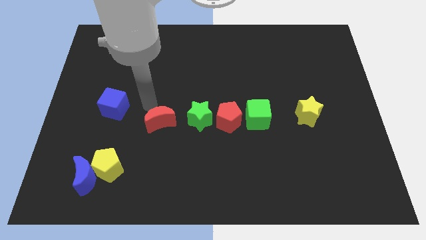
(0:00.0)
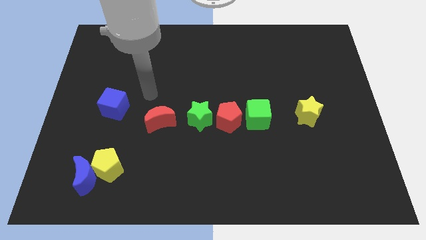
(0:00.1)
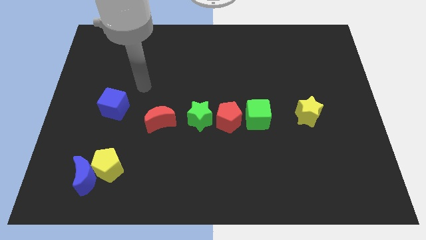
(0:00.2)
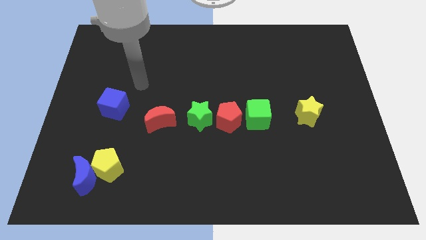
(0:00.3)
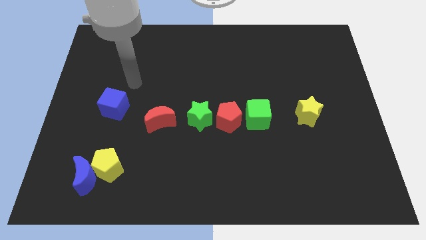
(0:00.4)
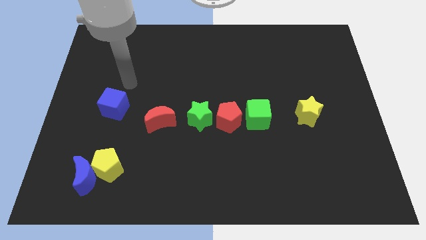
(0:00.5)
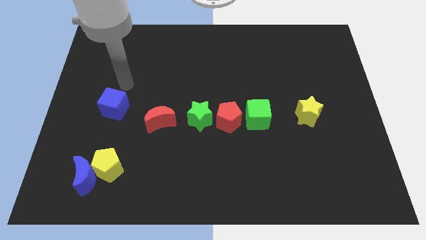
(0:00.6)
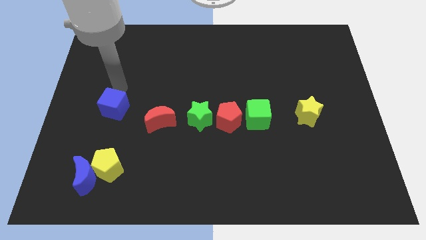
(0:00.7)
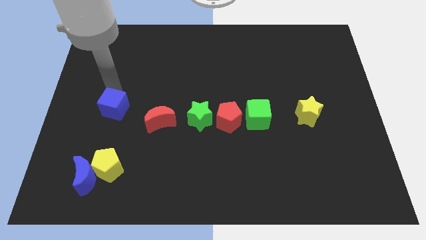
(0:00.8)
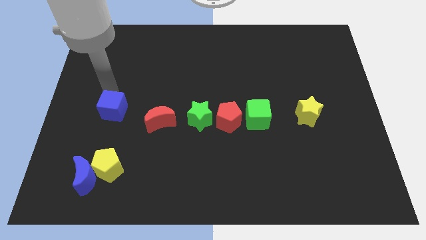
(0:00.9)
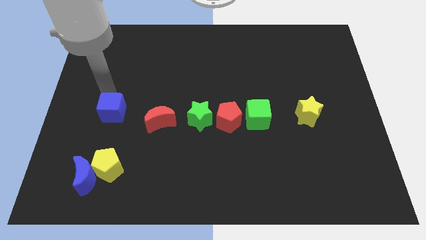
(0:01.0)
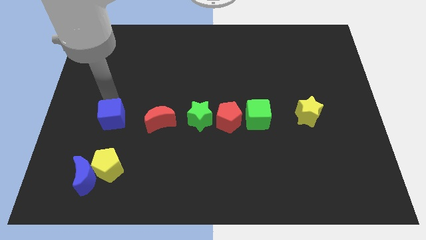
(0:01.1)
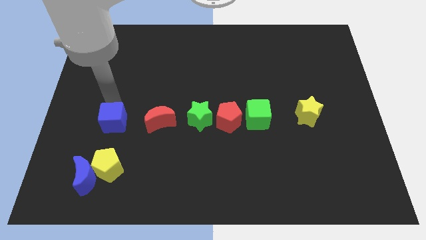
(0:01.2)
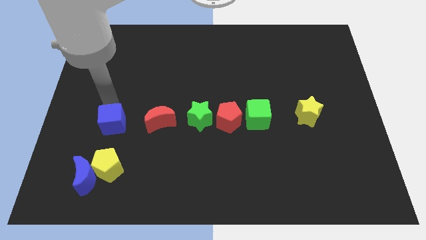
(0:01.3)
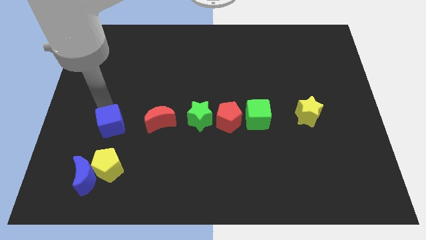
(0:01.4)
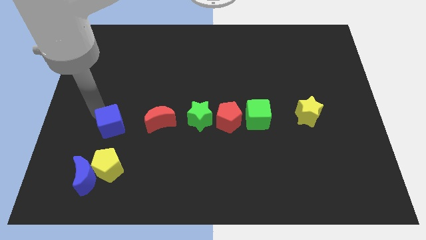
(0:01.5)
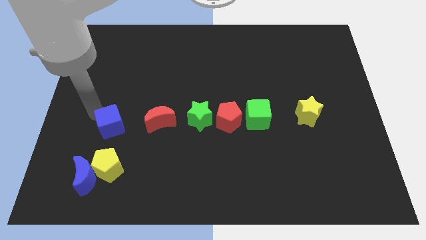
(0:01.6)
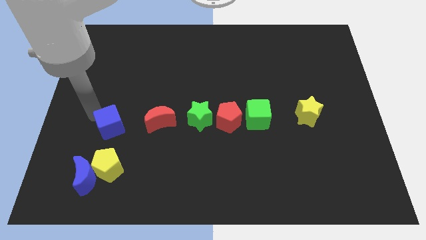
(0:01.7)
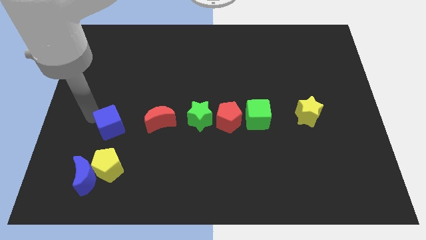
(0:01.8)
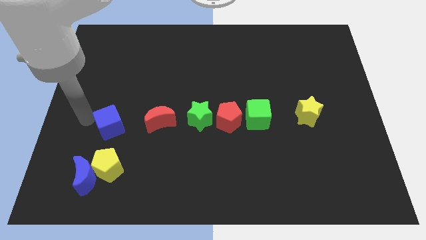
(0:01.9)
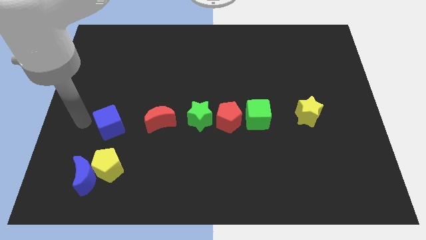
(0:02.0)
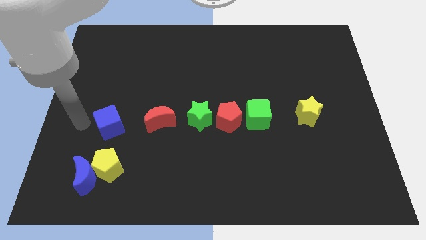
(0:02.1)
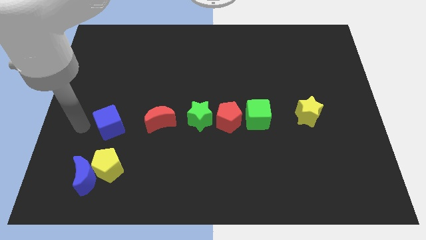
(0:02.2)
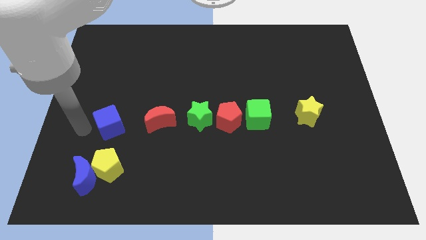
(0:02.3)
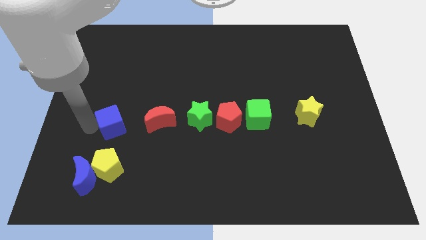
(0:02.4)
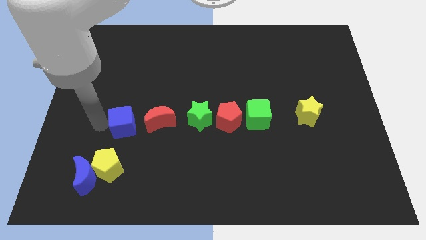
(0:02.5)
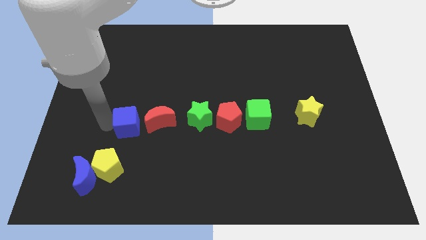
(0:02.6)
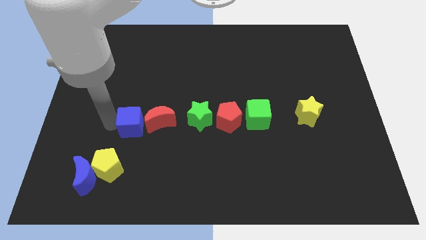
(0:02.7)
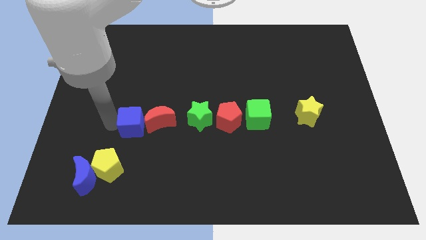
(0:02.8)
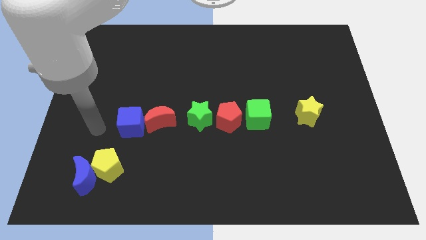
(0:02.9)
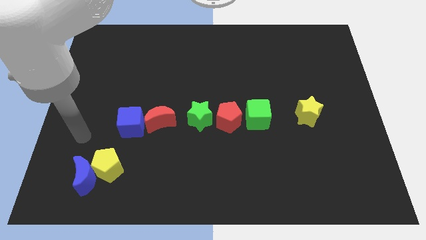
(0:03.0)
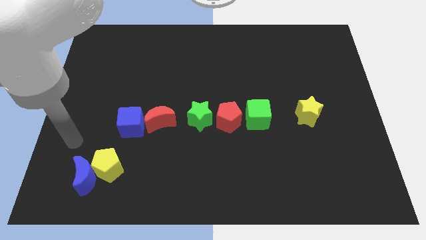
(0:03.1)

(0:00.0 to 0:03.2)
move the blue cube to the left of the red crescent

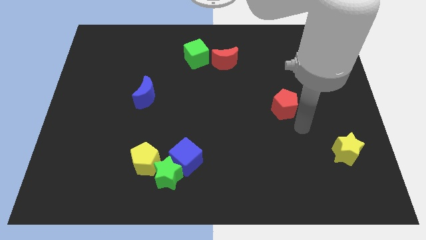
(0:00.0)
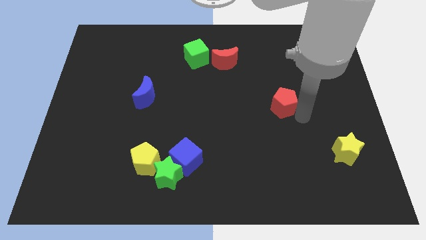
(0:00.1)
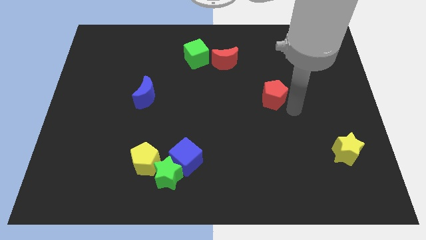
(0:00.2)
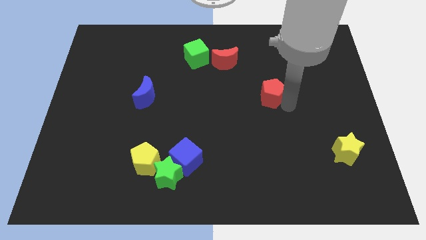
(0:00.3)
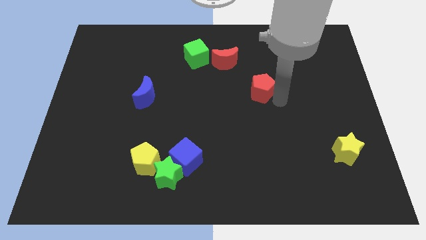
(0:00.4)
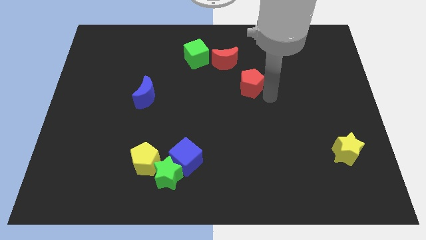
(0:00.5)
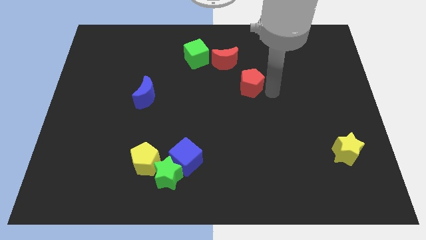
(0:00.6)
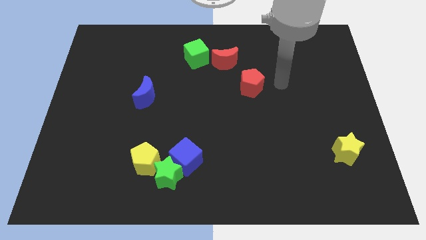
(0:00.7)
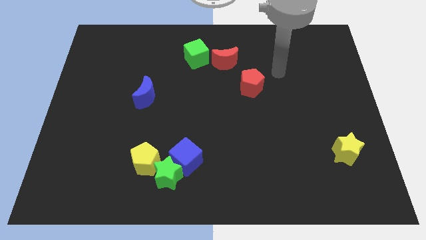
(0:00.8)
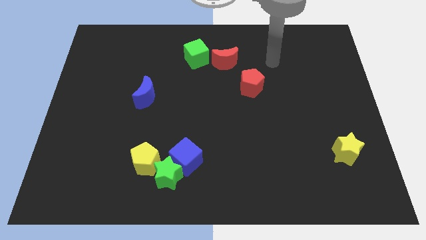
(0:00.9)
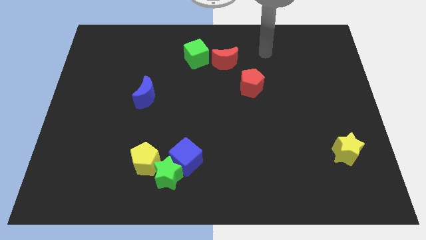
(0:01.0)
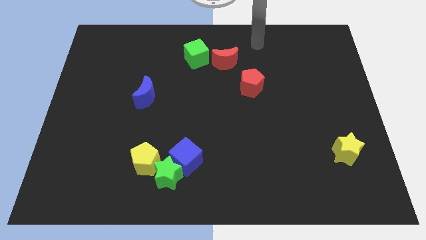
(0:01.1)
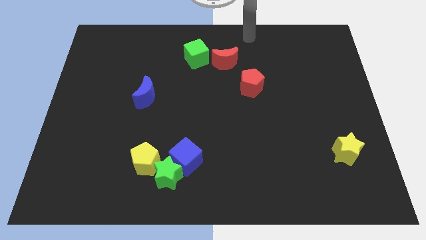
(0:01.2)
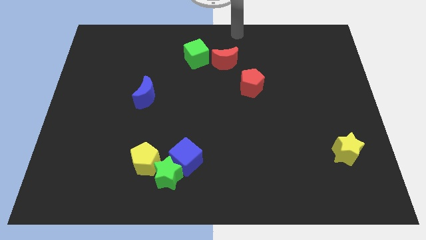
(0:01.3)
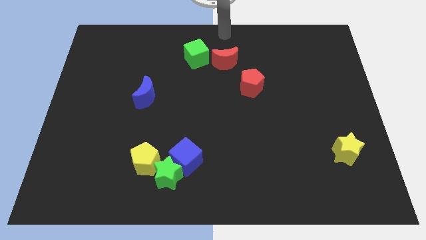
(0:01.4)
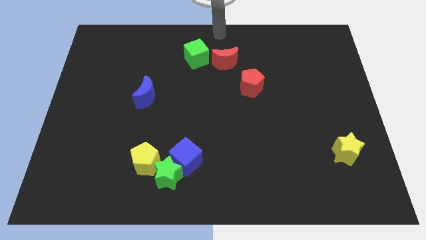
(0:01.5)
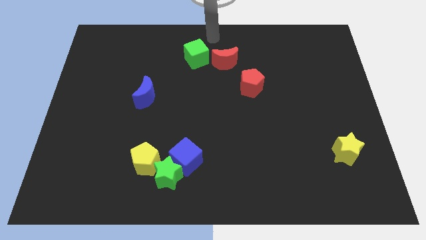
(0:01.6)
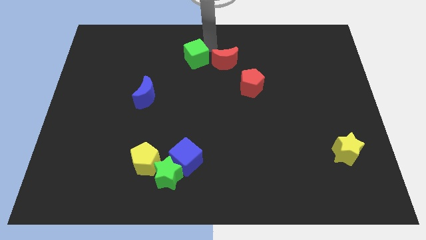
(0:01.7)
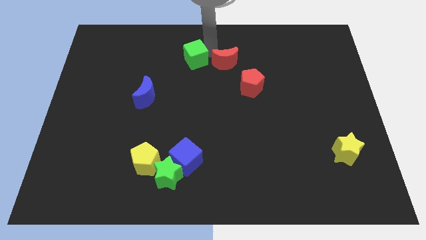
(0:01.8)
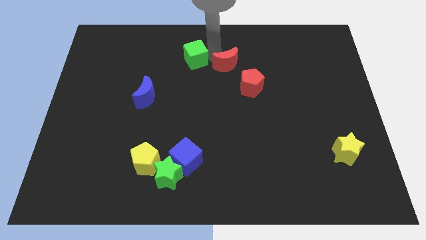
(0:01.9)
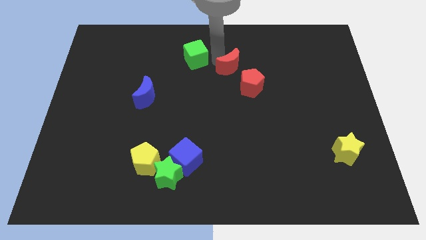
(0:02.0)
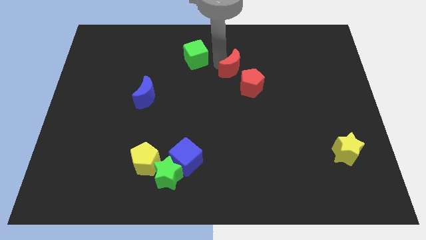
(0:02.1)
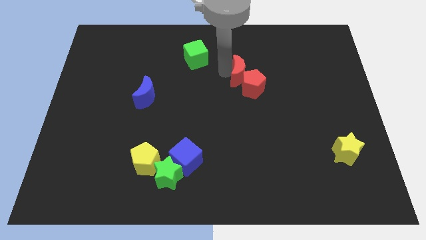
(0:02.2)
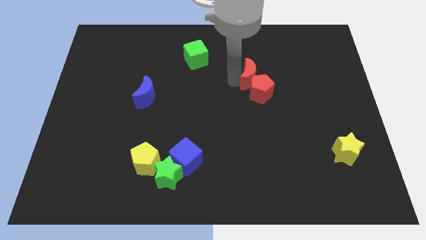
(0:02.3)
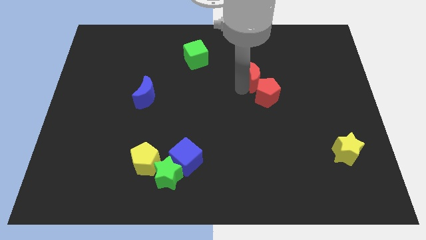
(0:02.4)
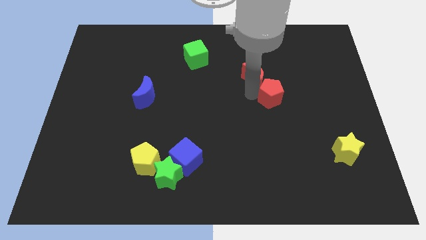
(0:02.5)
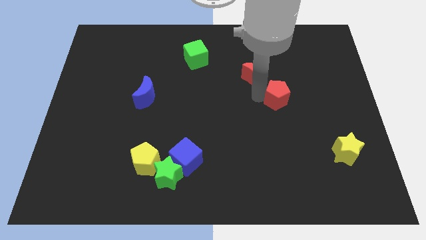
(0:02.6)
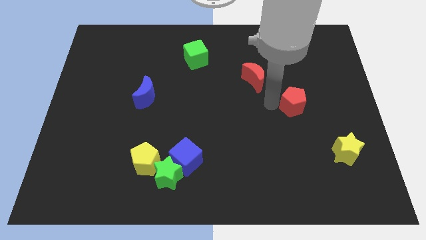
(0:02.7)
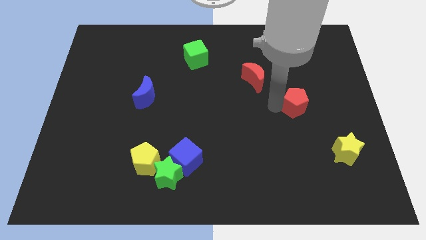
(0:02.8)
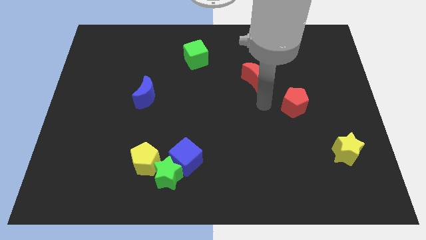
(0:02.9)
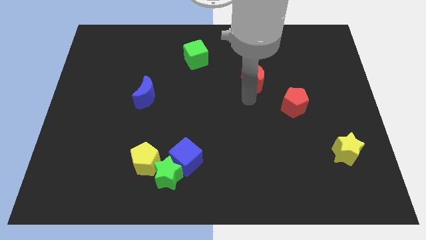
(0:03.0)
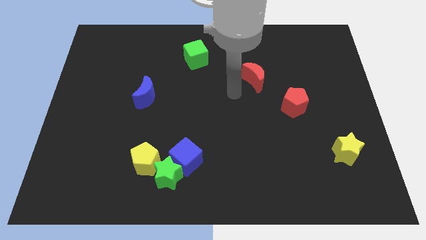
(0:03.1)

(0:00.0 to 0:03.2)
place the red crescent diagonally to the top left of the red pentagon

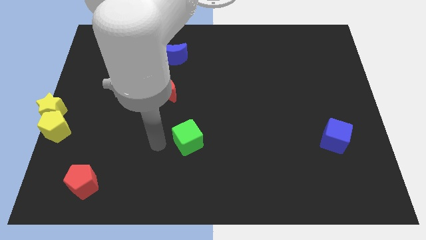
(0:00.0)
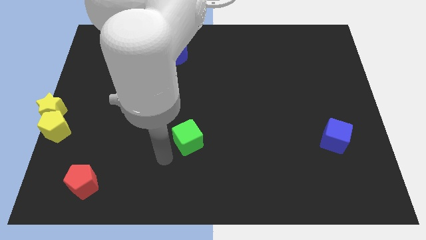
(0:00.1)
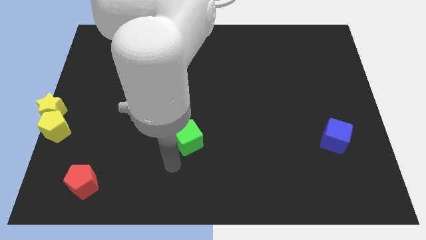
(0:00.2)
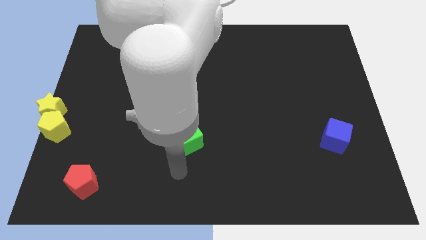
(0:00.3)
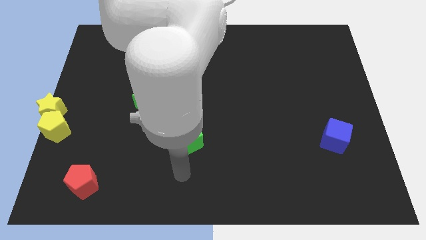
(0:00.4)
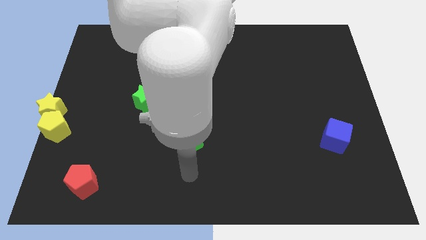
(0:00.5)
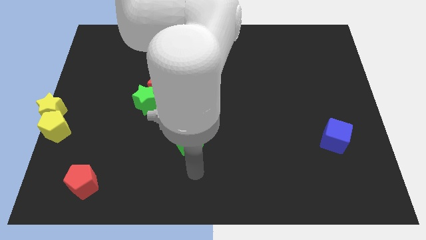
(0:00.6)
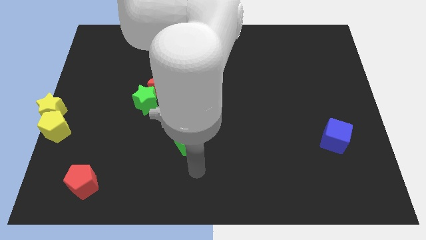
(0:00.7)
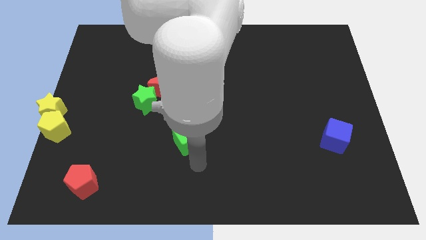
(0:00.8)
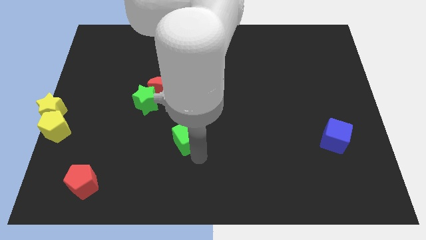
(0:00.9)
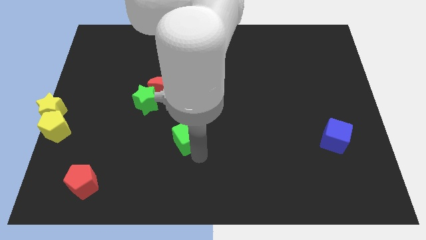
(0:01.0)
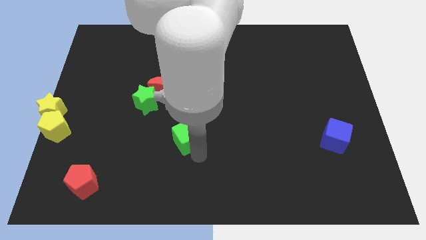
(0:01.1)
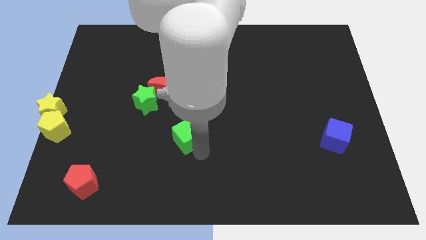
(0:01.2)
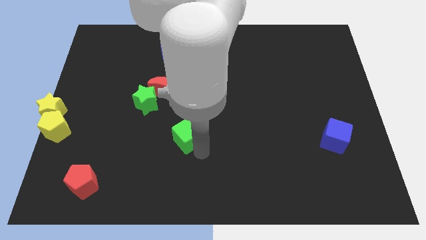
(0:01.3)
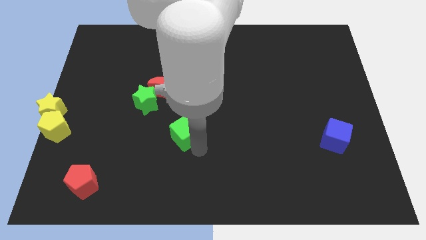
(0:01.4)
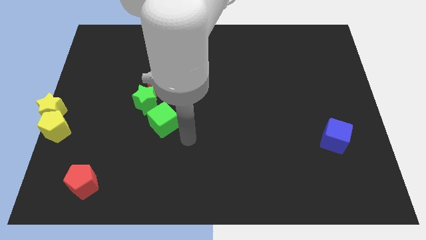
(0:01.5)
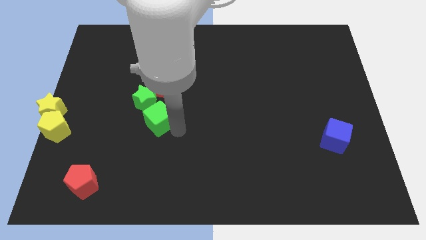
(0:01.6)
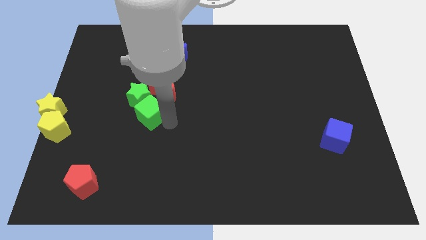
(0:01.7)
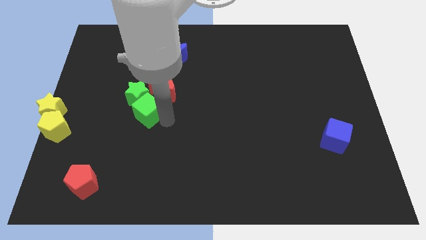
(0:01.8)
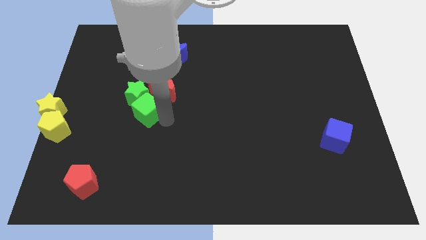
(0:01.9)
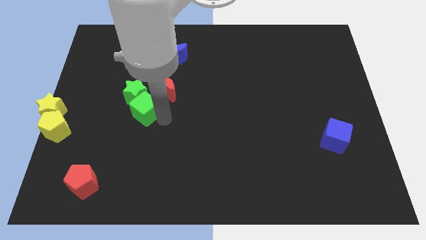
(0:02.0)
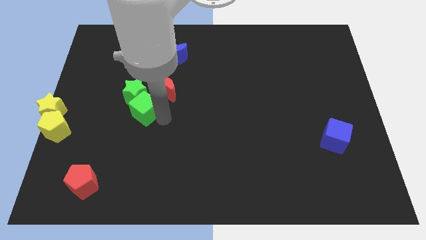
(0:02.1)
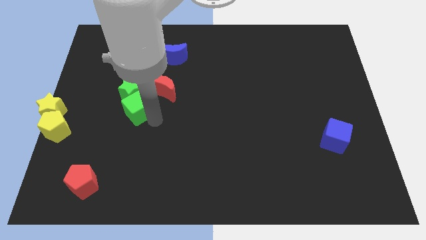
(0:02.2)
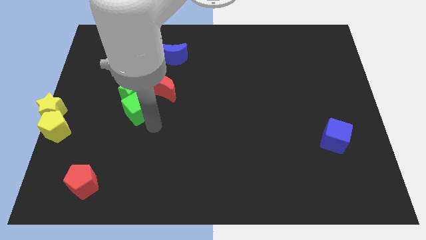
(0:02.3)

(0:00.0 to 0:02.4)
push green cube near green star
